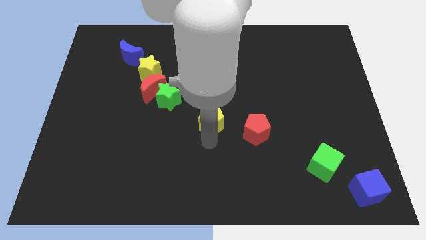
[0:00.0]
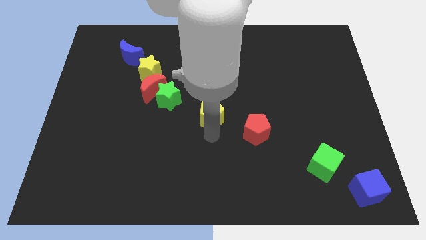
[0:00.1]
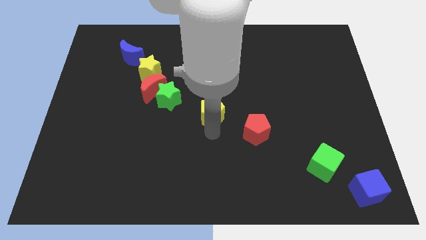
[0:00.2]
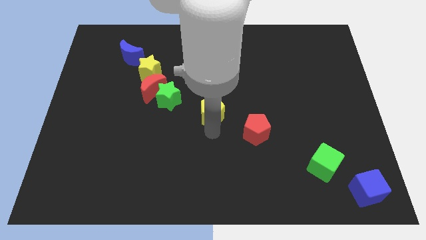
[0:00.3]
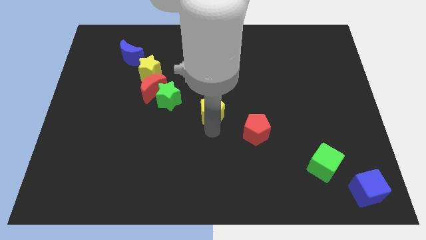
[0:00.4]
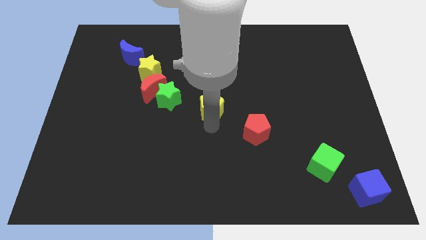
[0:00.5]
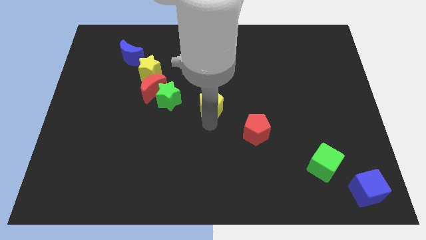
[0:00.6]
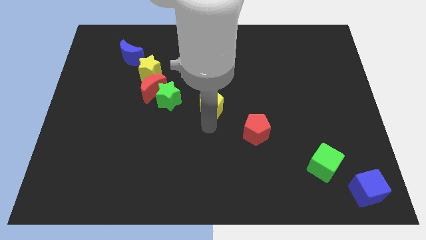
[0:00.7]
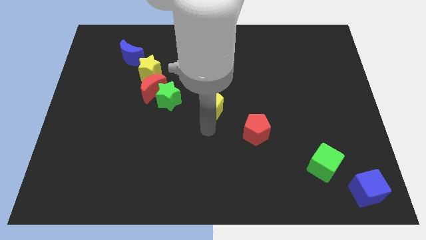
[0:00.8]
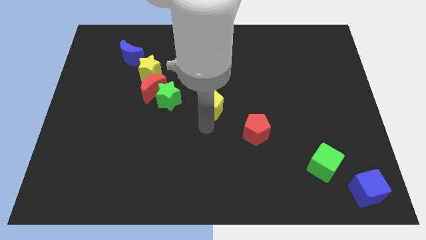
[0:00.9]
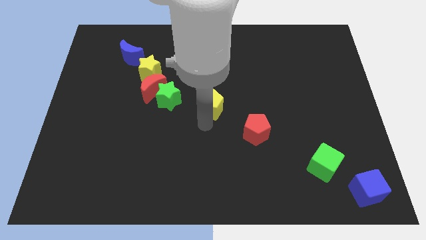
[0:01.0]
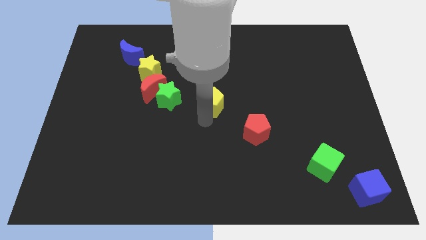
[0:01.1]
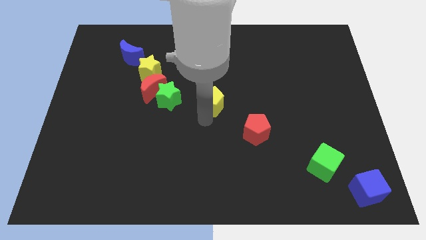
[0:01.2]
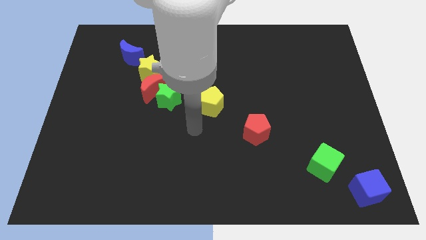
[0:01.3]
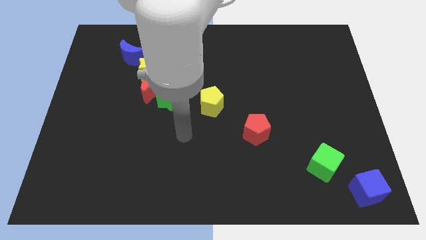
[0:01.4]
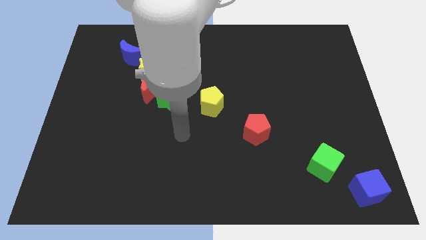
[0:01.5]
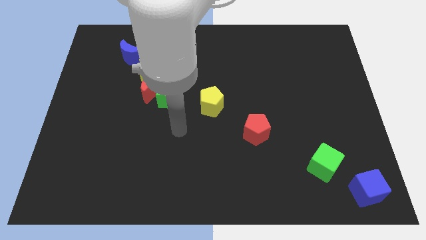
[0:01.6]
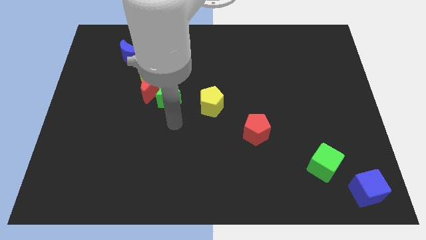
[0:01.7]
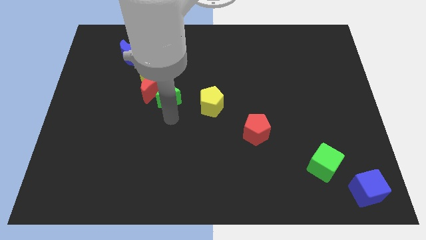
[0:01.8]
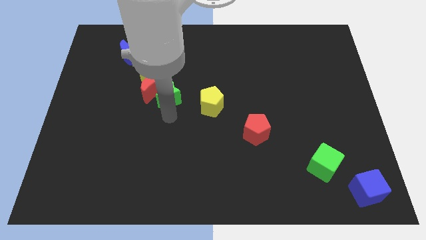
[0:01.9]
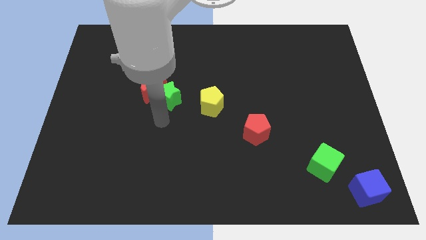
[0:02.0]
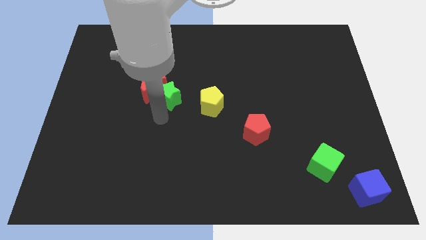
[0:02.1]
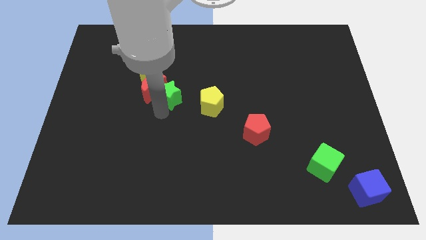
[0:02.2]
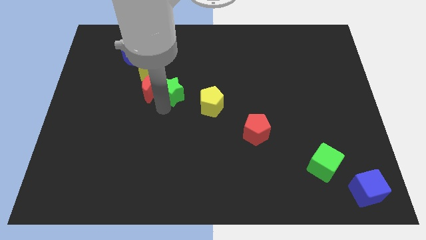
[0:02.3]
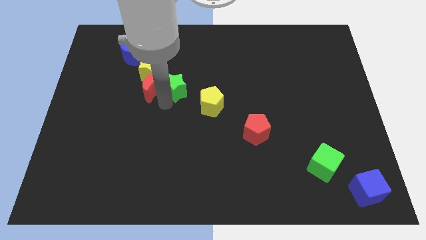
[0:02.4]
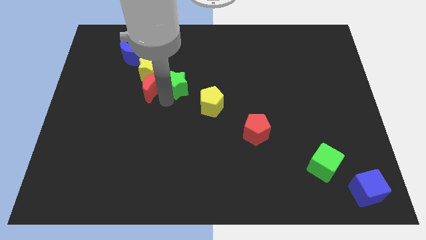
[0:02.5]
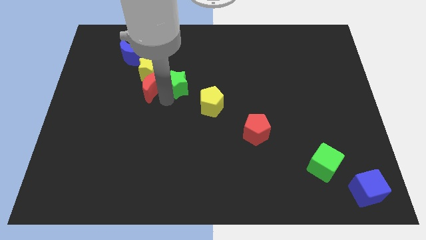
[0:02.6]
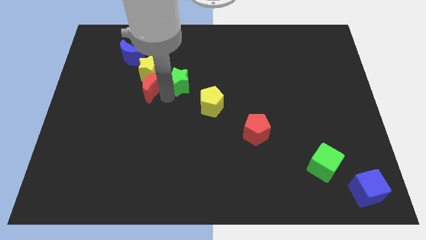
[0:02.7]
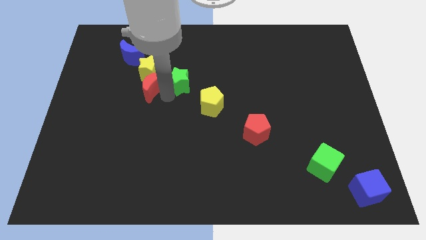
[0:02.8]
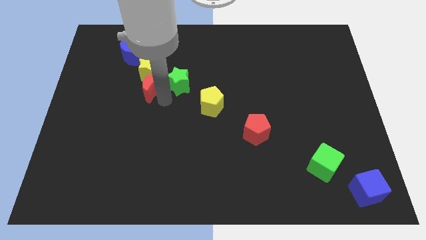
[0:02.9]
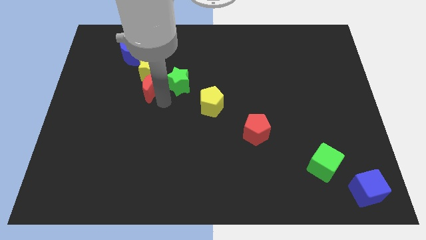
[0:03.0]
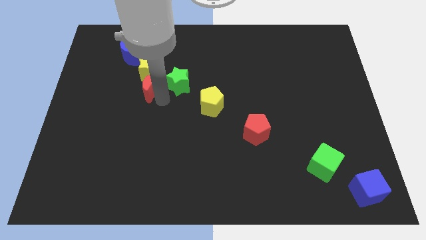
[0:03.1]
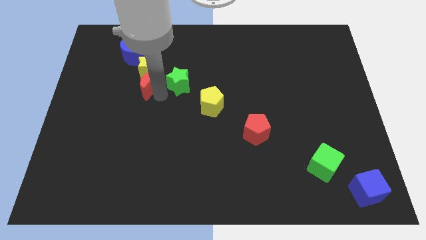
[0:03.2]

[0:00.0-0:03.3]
slightly move the green star up

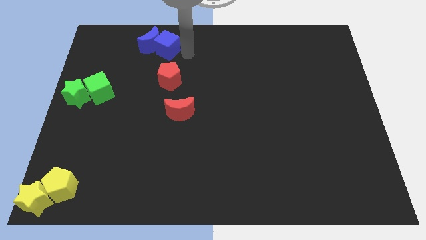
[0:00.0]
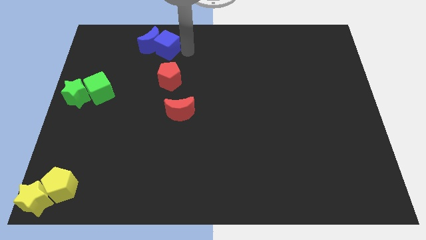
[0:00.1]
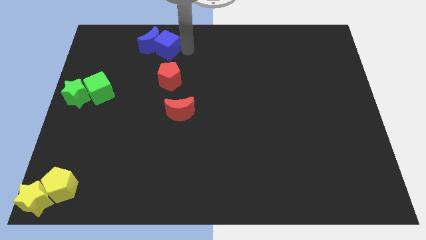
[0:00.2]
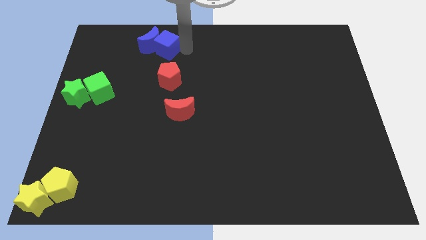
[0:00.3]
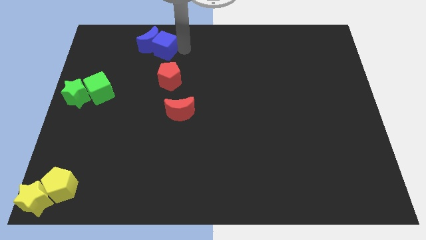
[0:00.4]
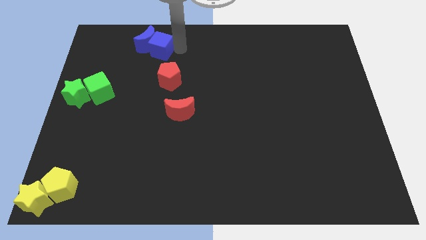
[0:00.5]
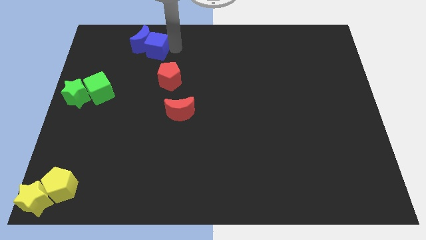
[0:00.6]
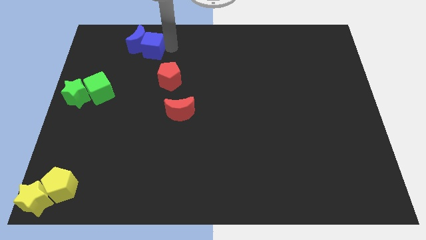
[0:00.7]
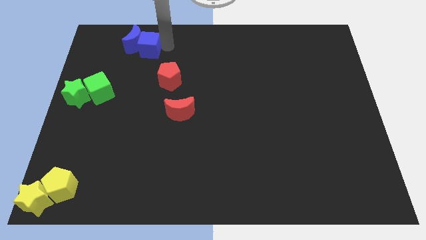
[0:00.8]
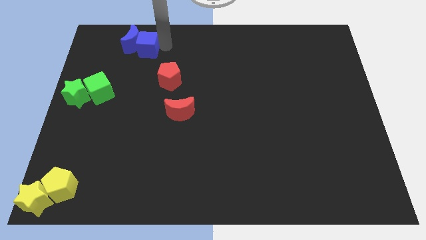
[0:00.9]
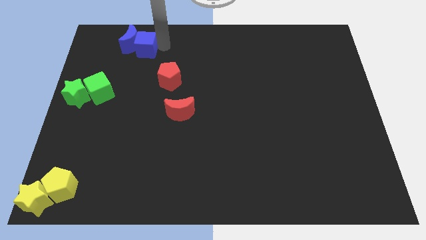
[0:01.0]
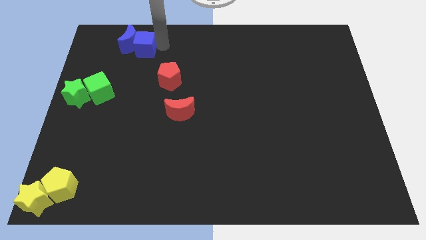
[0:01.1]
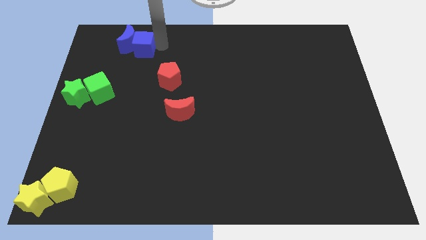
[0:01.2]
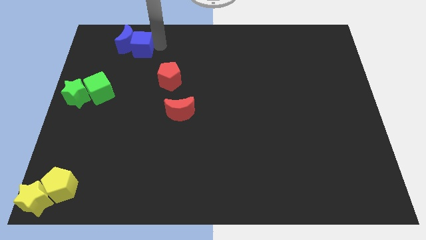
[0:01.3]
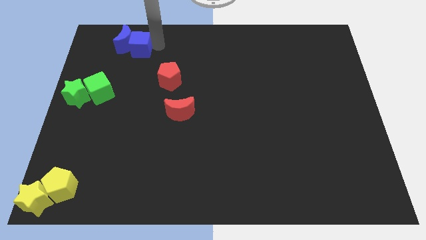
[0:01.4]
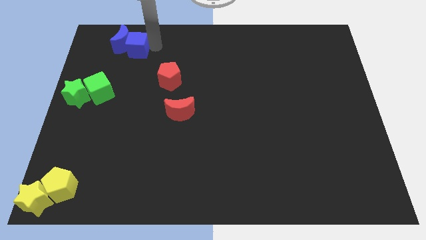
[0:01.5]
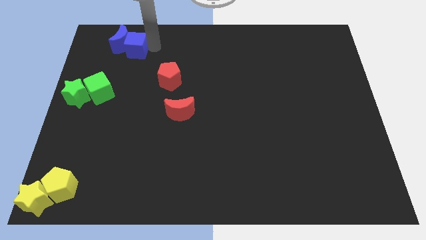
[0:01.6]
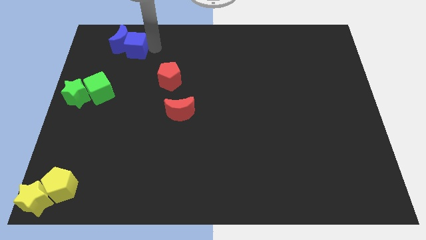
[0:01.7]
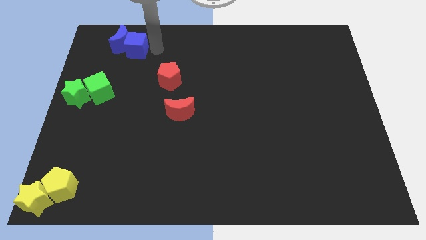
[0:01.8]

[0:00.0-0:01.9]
place the blue blocks diagonally to green blocks

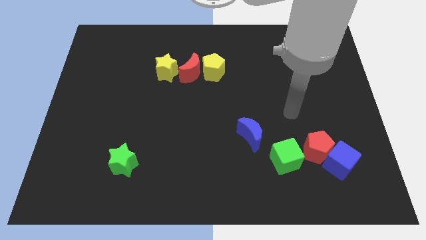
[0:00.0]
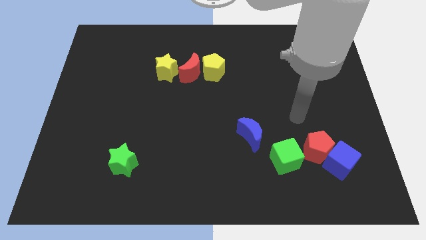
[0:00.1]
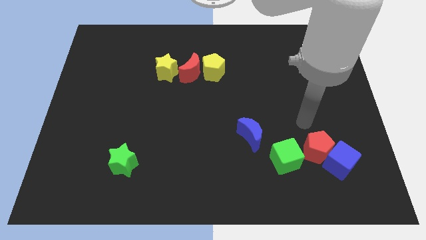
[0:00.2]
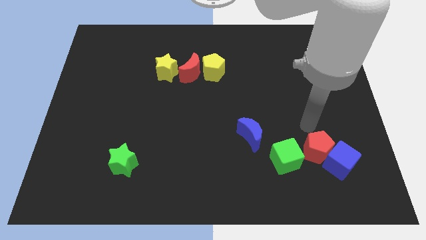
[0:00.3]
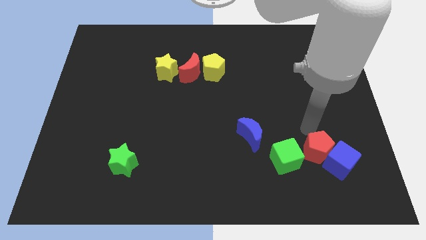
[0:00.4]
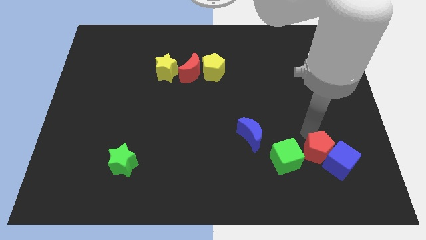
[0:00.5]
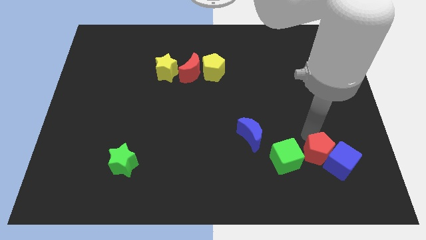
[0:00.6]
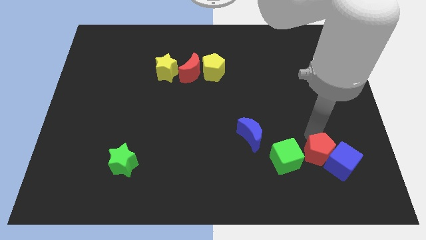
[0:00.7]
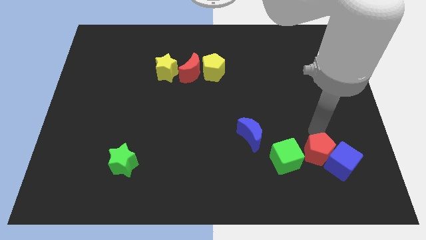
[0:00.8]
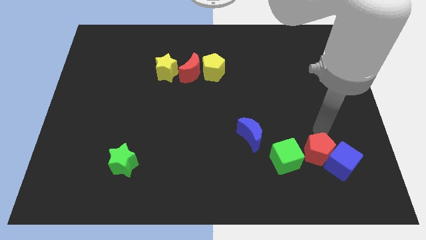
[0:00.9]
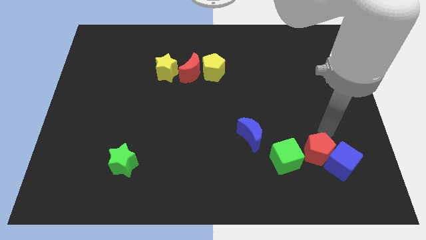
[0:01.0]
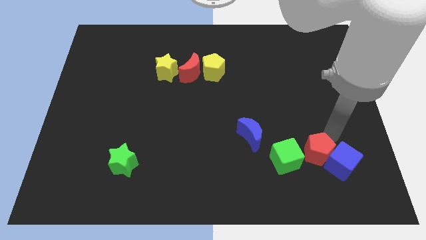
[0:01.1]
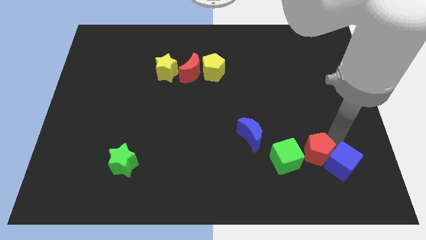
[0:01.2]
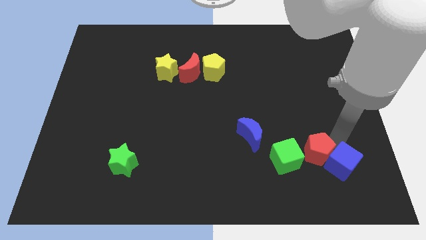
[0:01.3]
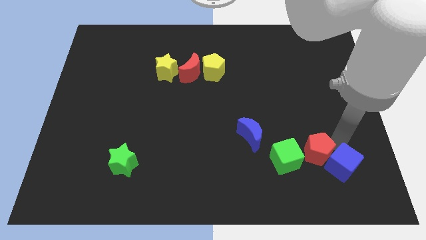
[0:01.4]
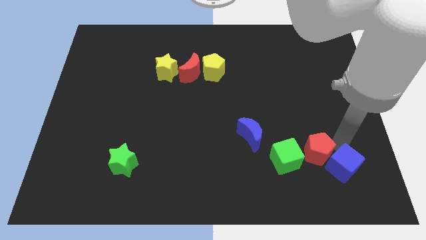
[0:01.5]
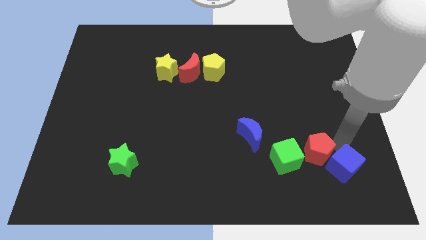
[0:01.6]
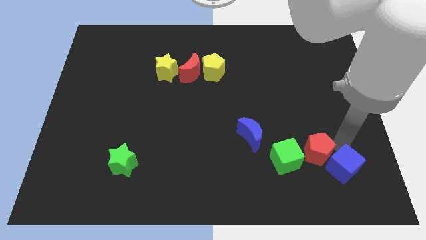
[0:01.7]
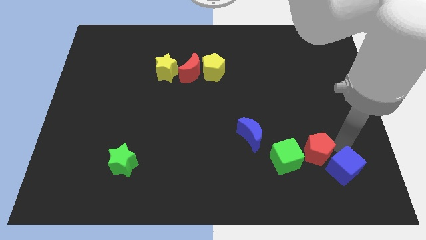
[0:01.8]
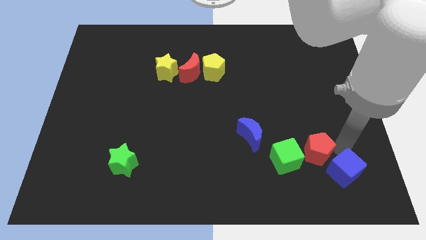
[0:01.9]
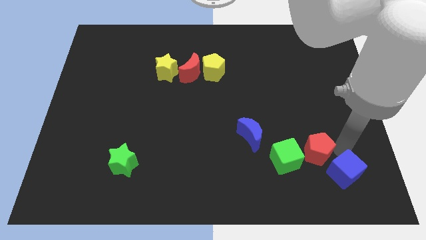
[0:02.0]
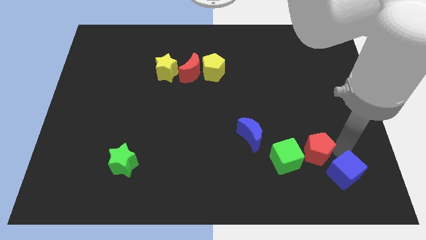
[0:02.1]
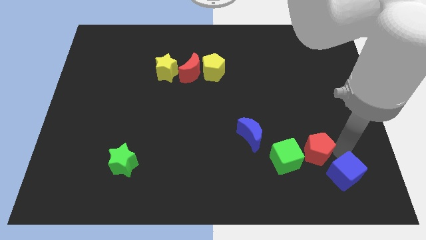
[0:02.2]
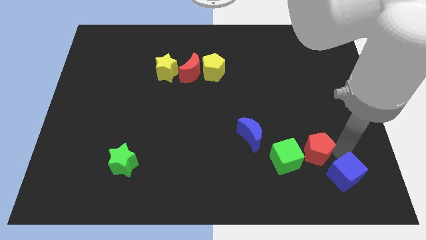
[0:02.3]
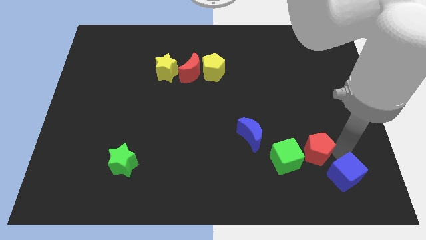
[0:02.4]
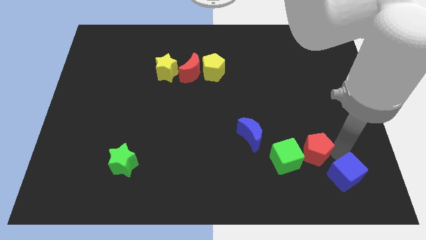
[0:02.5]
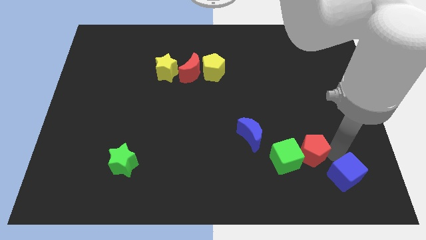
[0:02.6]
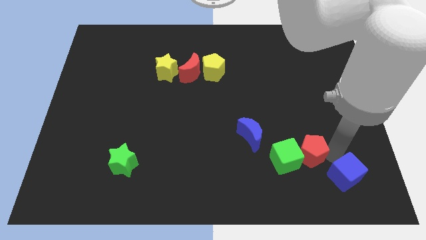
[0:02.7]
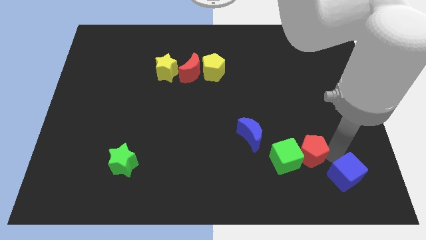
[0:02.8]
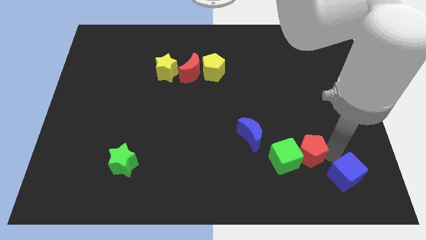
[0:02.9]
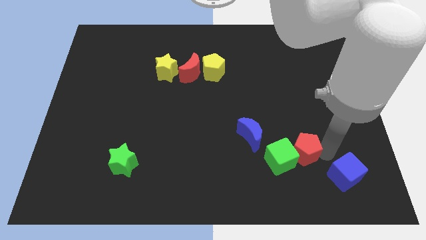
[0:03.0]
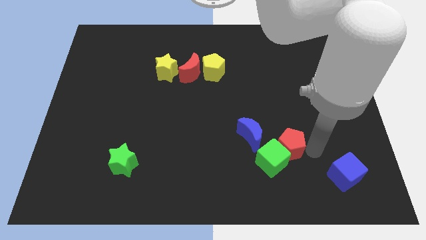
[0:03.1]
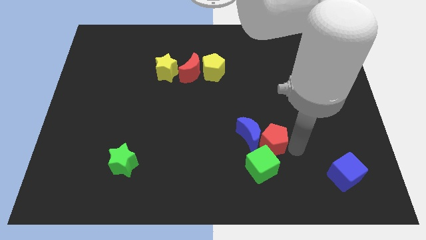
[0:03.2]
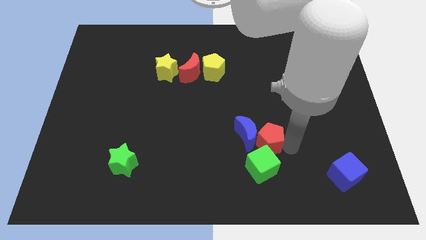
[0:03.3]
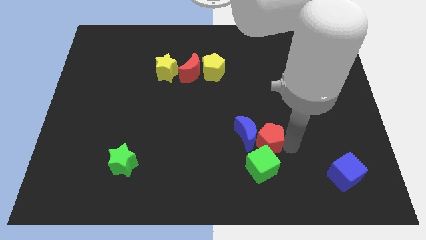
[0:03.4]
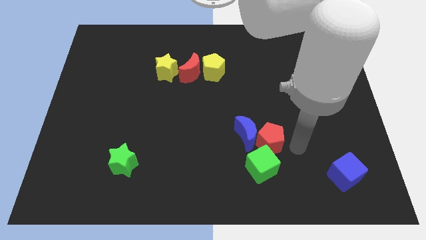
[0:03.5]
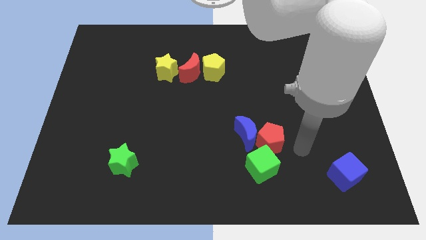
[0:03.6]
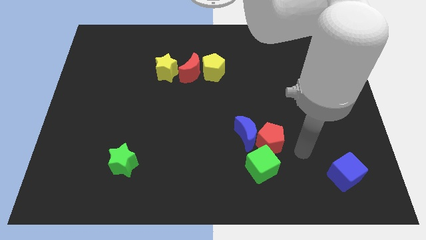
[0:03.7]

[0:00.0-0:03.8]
separate the red pentagon and blue cube

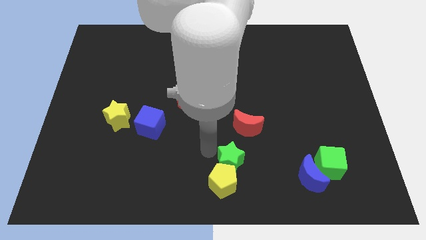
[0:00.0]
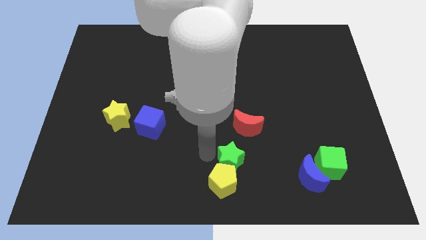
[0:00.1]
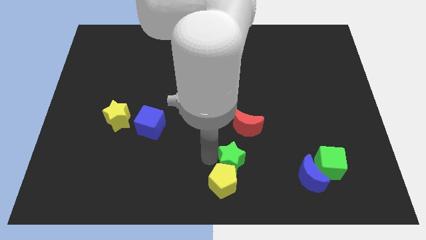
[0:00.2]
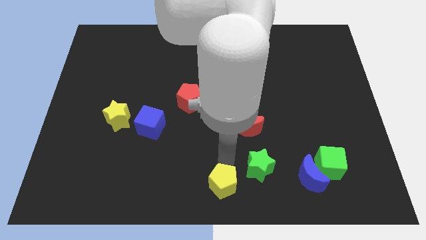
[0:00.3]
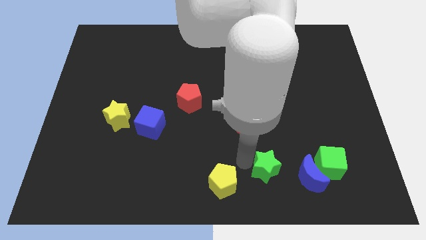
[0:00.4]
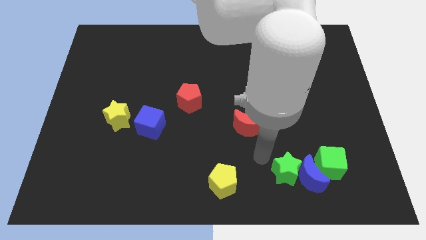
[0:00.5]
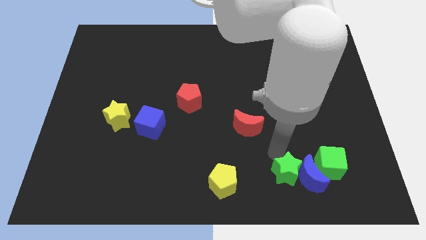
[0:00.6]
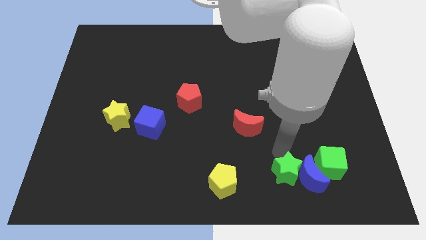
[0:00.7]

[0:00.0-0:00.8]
move green star into the blue moon
